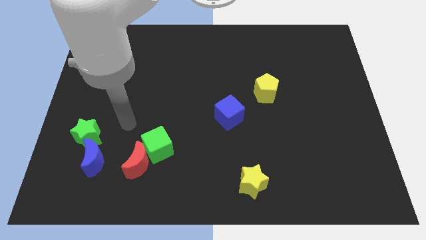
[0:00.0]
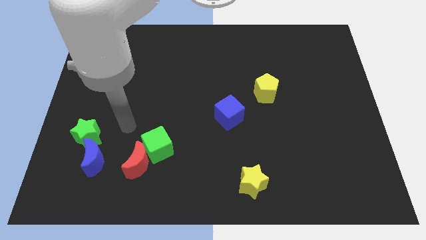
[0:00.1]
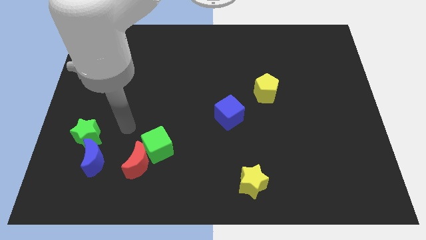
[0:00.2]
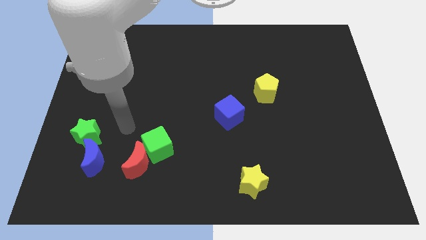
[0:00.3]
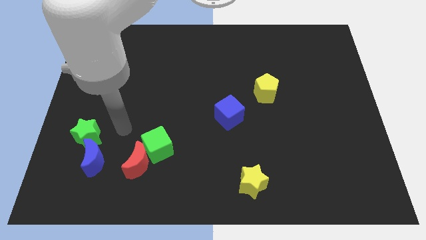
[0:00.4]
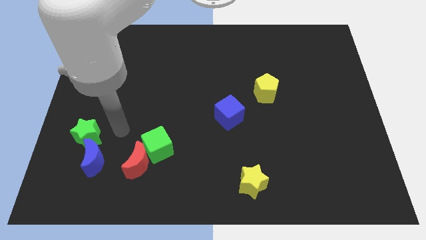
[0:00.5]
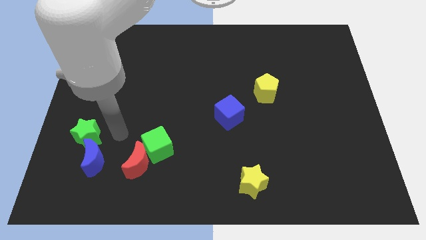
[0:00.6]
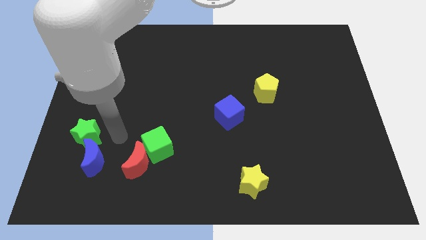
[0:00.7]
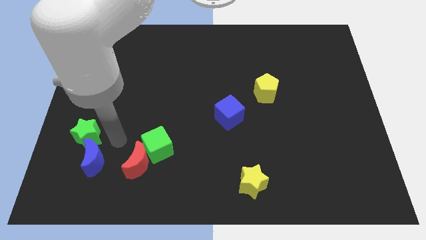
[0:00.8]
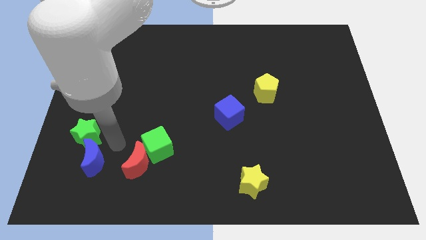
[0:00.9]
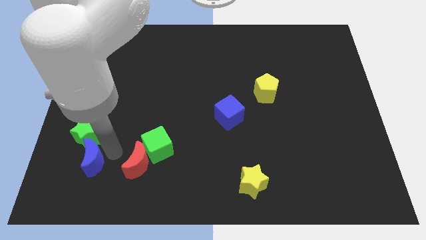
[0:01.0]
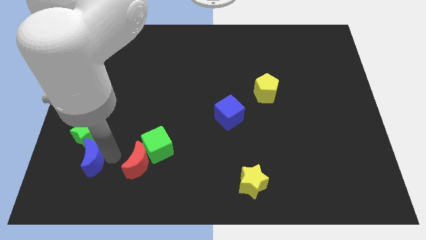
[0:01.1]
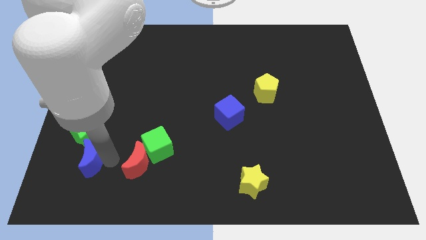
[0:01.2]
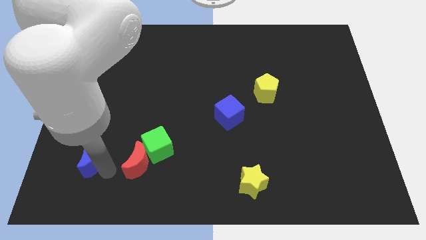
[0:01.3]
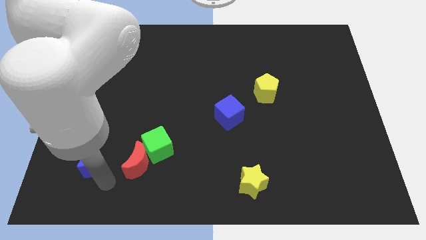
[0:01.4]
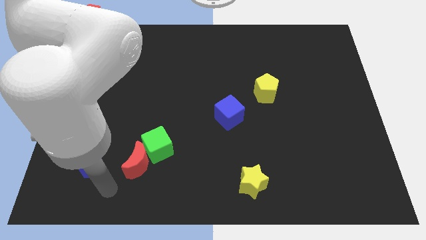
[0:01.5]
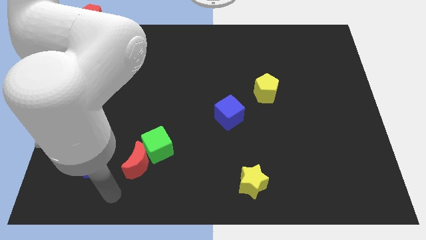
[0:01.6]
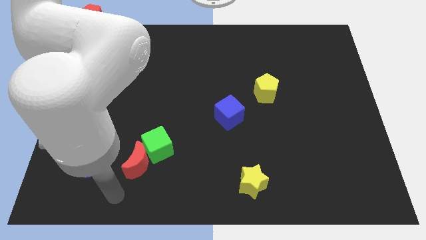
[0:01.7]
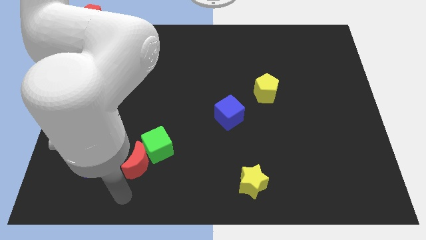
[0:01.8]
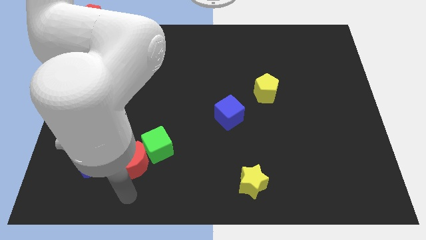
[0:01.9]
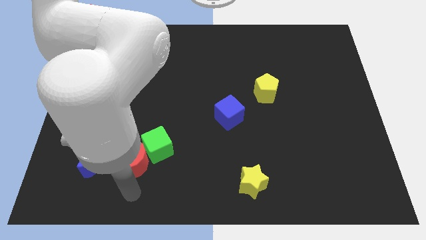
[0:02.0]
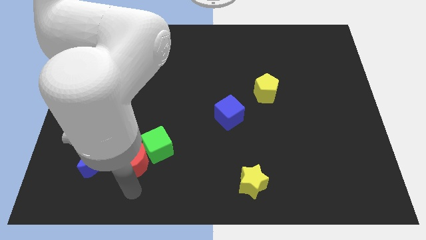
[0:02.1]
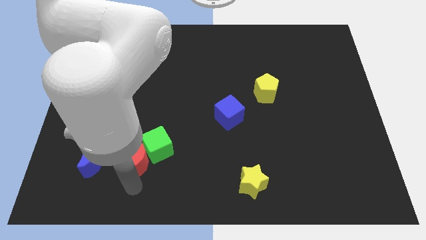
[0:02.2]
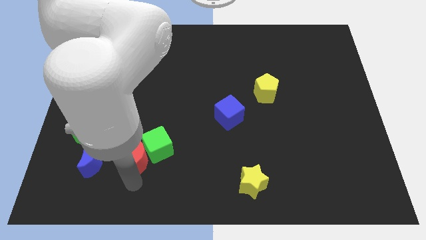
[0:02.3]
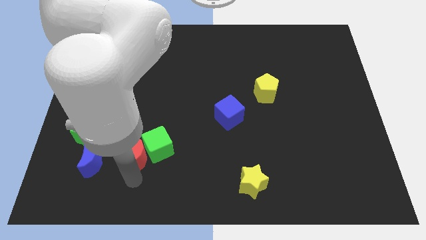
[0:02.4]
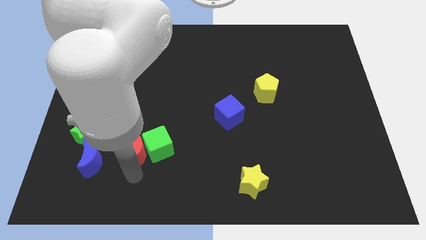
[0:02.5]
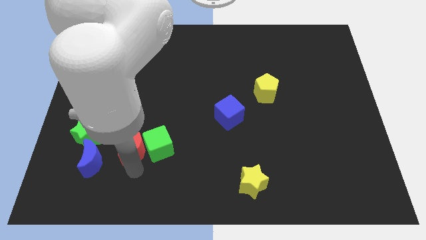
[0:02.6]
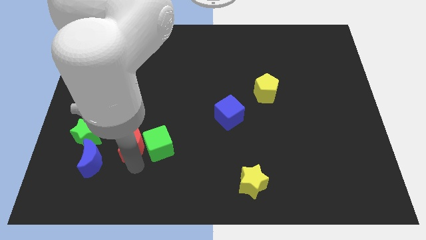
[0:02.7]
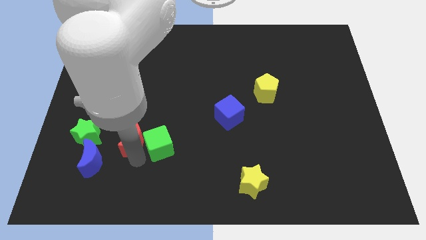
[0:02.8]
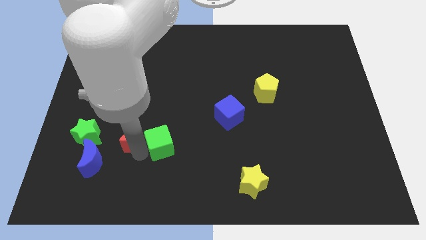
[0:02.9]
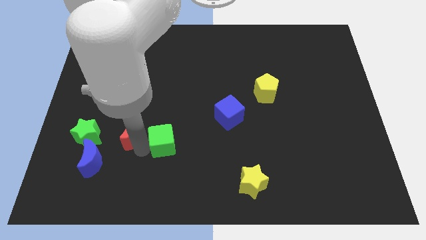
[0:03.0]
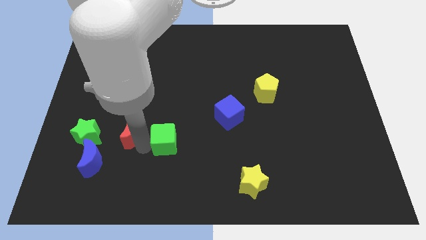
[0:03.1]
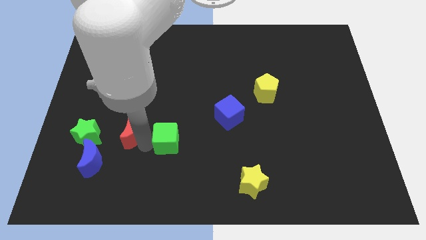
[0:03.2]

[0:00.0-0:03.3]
push red crescent beside green star

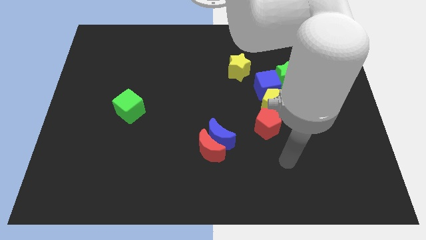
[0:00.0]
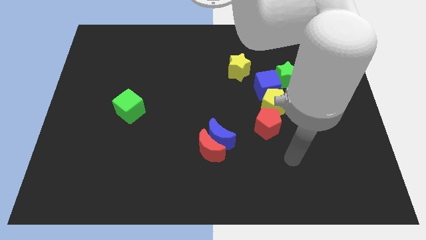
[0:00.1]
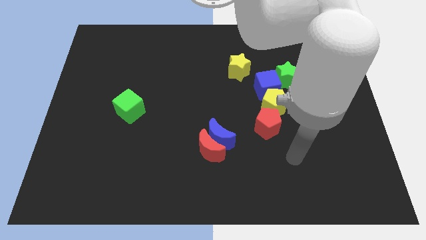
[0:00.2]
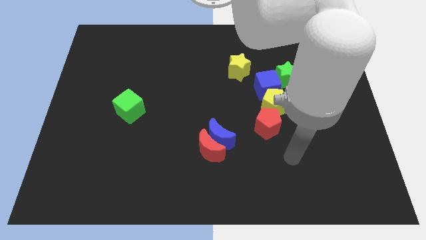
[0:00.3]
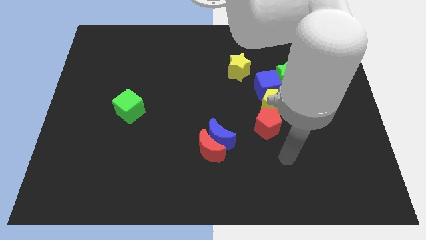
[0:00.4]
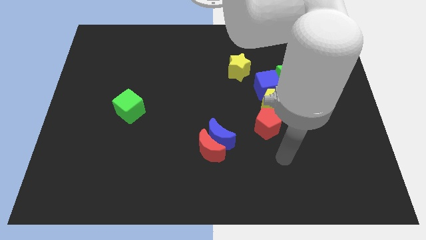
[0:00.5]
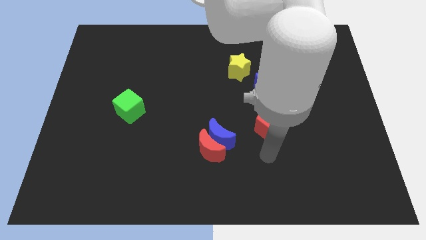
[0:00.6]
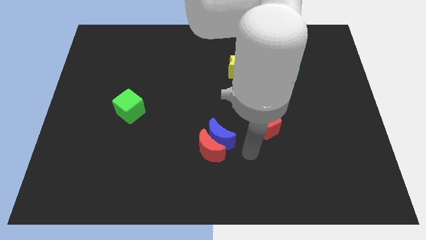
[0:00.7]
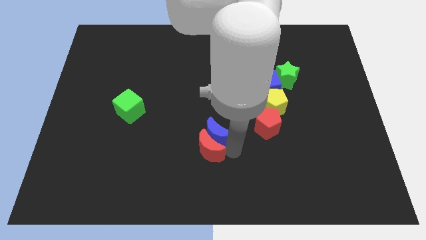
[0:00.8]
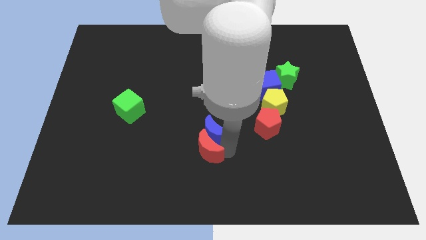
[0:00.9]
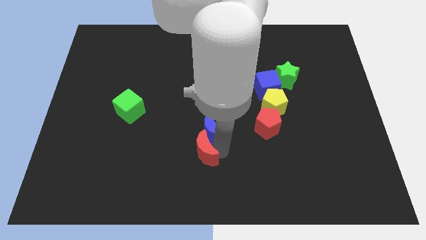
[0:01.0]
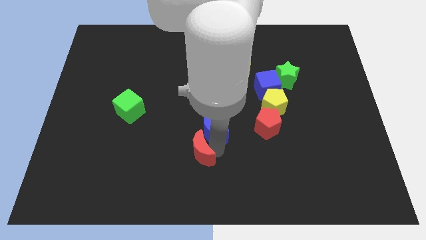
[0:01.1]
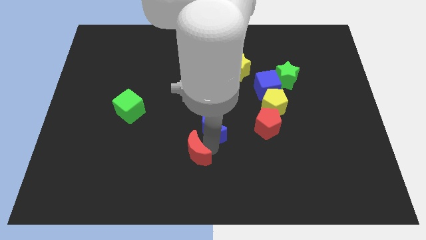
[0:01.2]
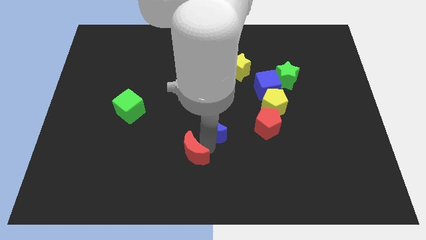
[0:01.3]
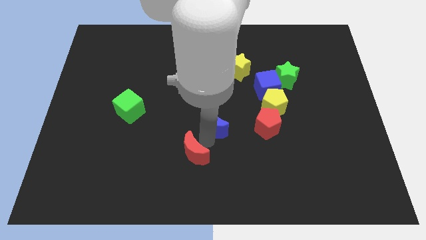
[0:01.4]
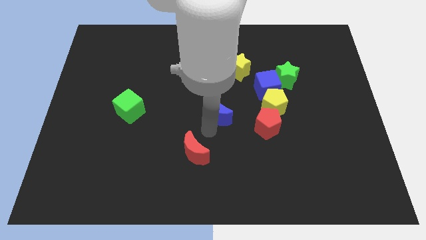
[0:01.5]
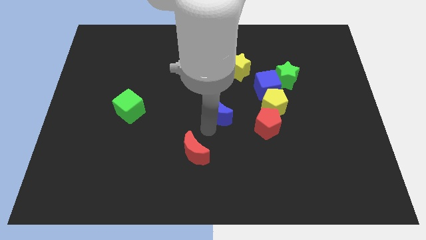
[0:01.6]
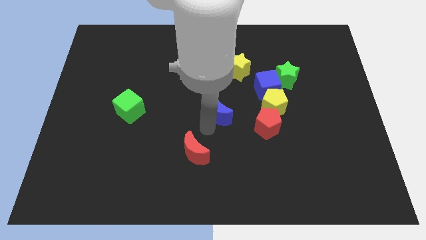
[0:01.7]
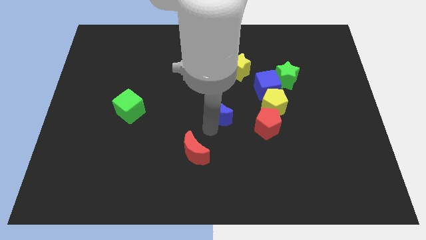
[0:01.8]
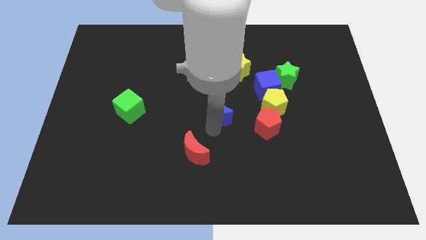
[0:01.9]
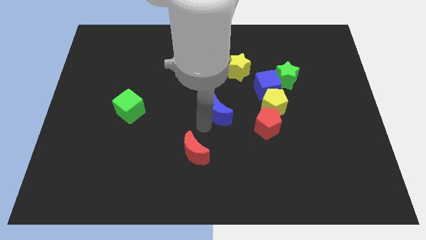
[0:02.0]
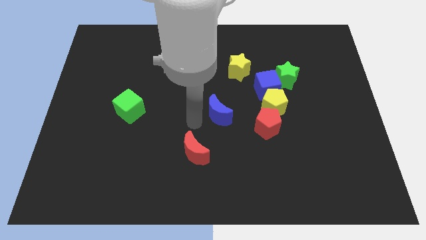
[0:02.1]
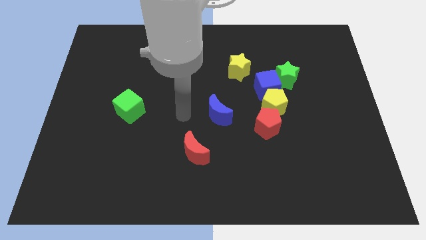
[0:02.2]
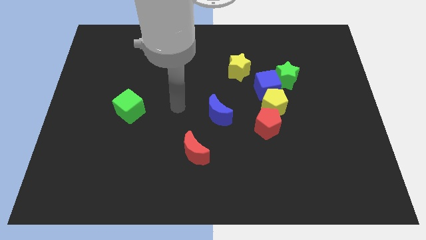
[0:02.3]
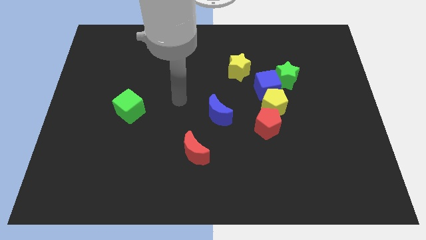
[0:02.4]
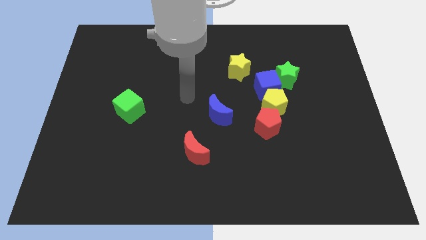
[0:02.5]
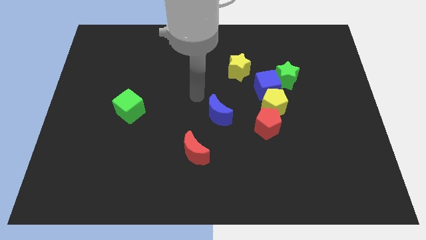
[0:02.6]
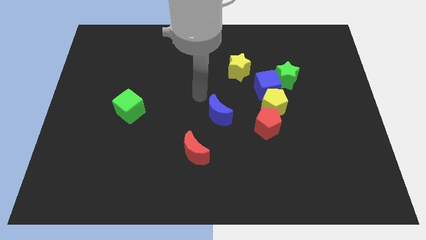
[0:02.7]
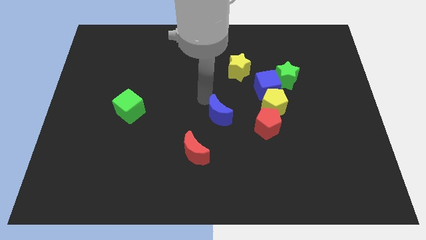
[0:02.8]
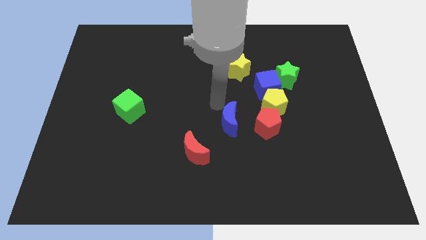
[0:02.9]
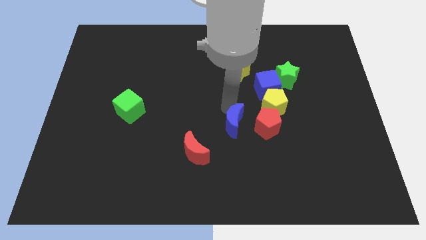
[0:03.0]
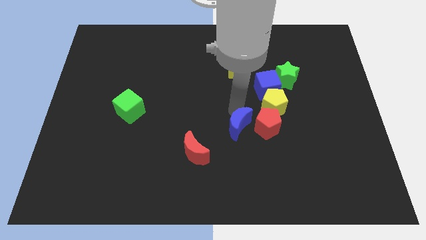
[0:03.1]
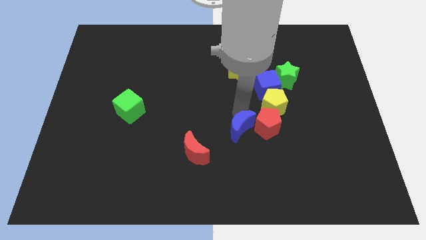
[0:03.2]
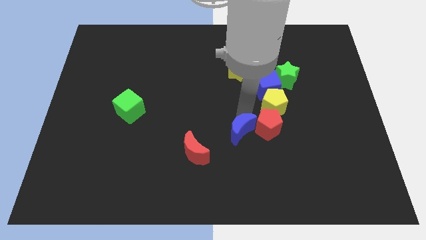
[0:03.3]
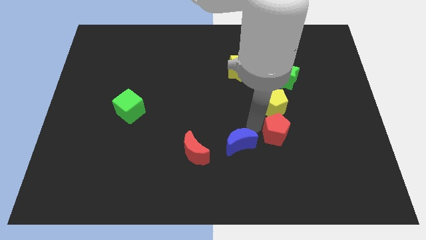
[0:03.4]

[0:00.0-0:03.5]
push blue crescent beside red pentagon

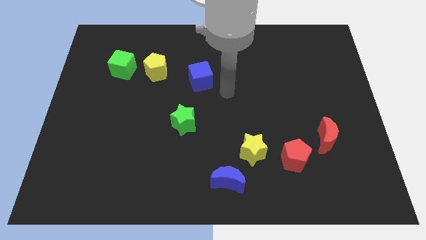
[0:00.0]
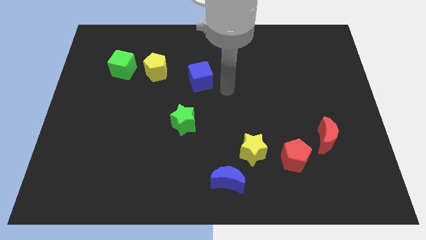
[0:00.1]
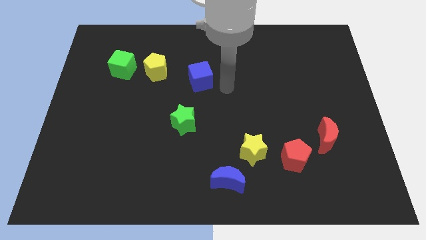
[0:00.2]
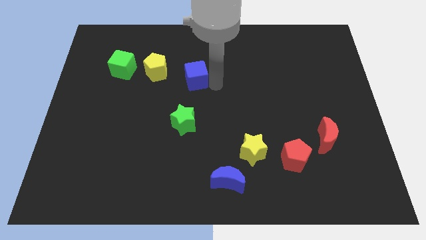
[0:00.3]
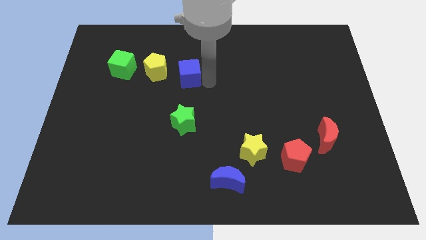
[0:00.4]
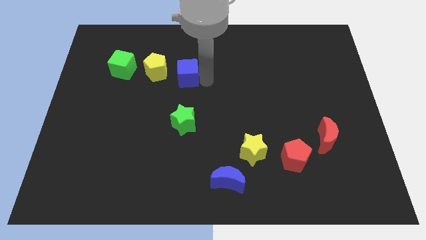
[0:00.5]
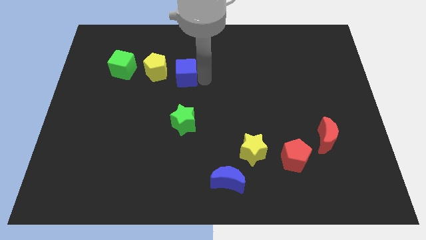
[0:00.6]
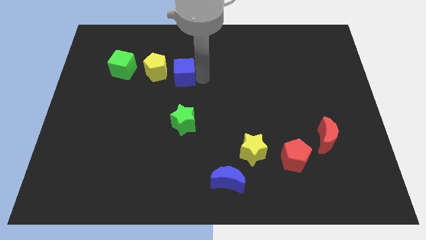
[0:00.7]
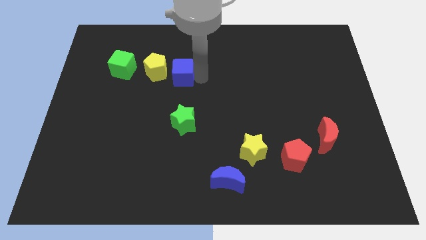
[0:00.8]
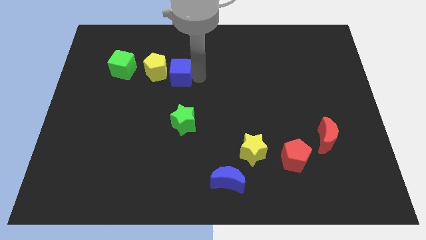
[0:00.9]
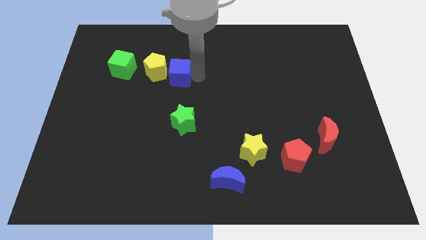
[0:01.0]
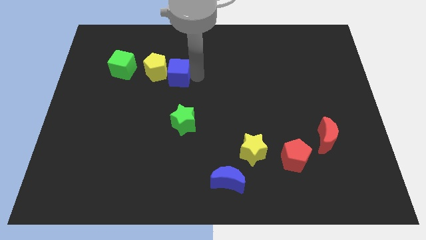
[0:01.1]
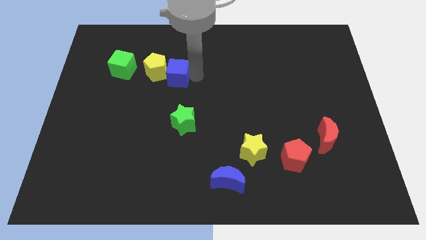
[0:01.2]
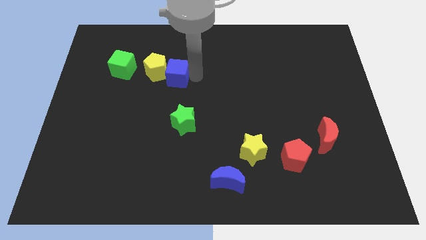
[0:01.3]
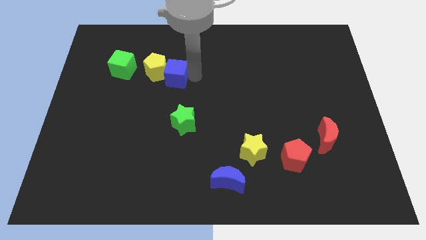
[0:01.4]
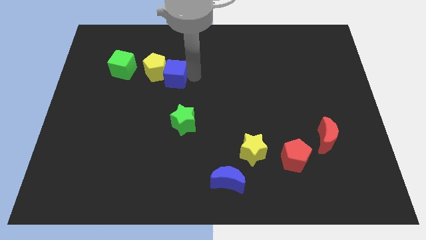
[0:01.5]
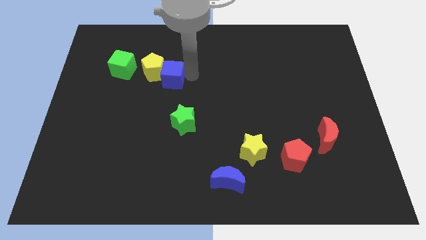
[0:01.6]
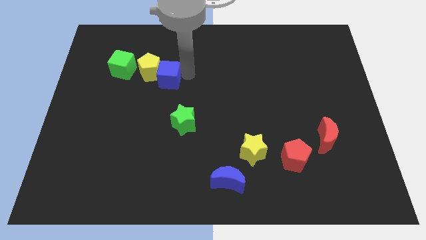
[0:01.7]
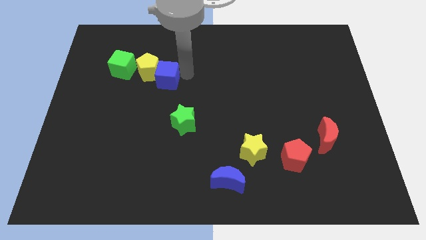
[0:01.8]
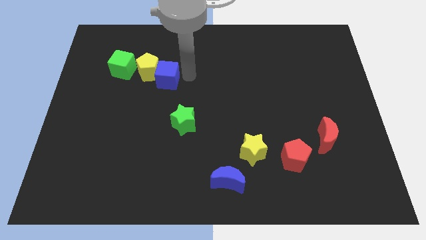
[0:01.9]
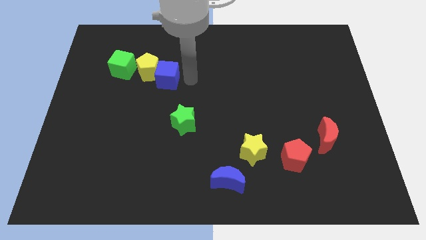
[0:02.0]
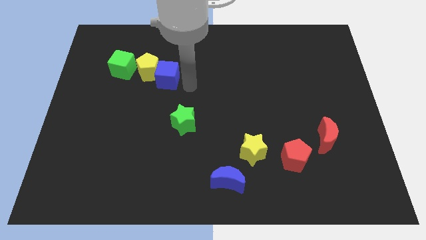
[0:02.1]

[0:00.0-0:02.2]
push the blue cube into the yellow pentagon
